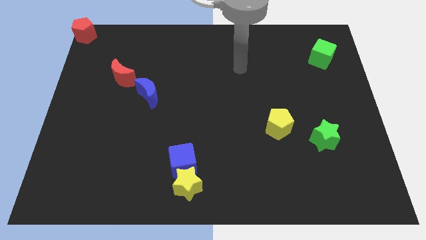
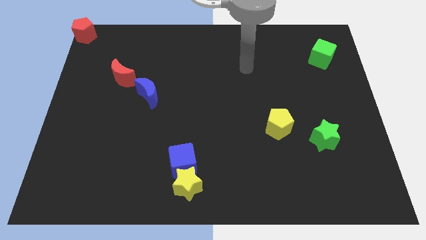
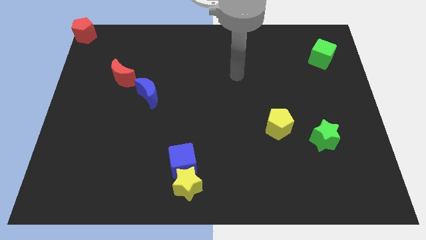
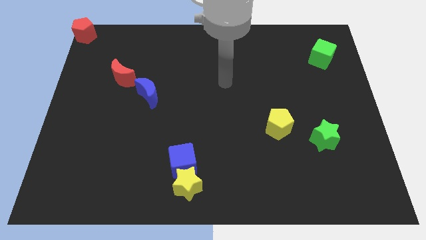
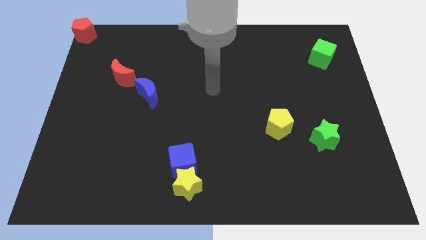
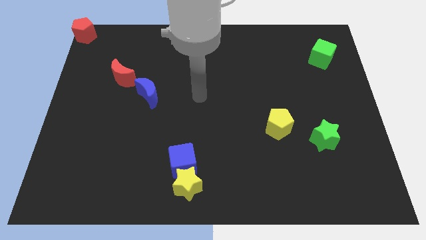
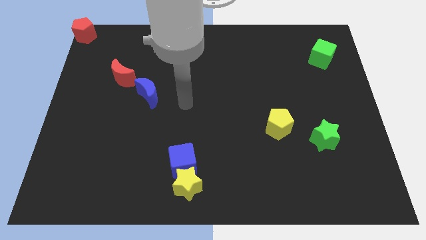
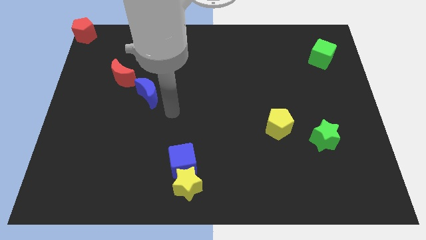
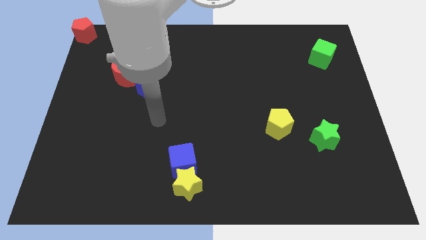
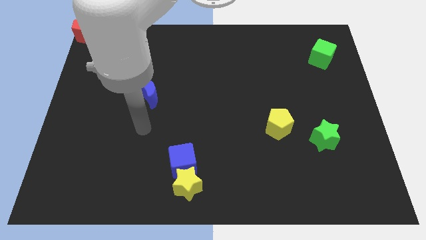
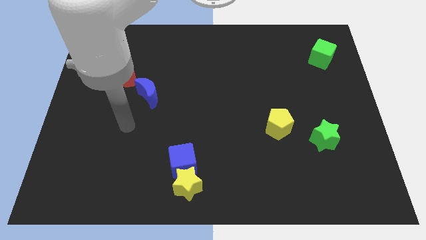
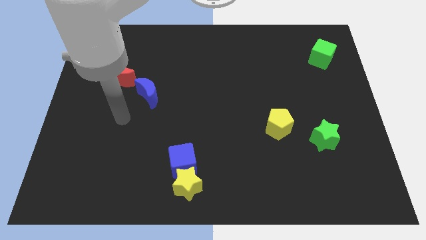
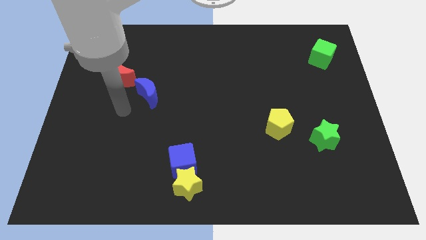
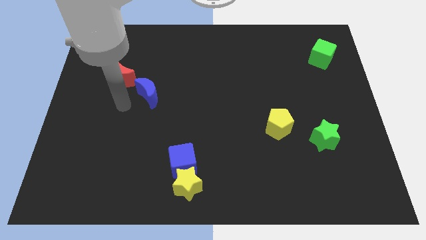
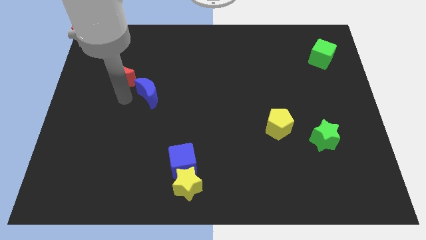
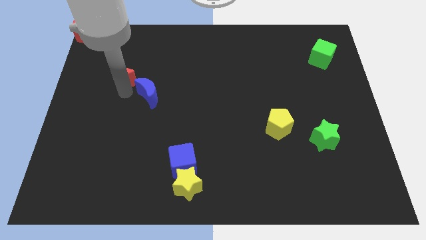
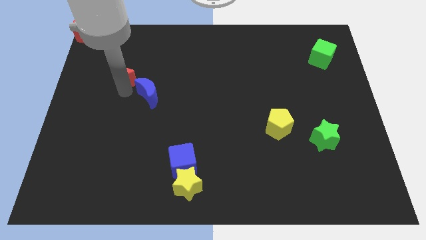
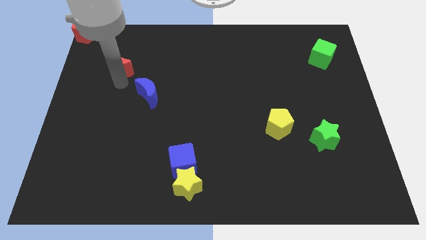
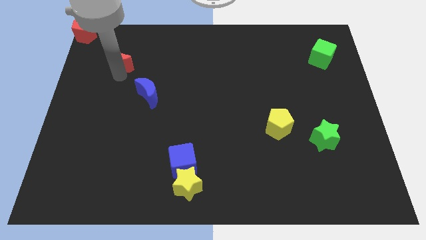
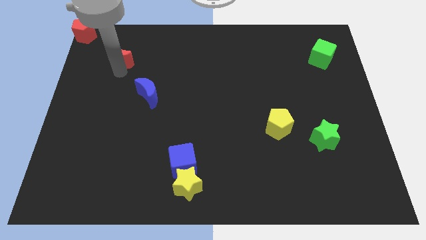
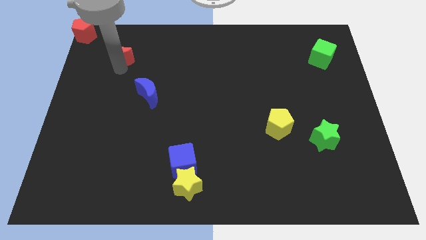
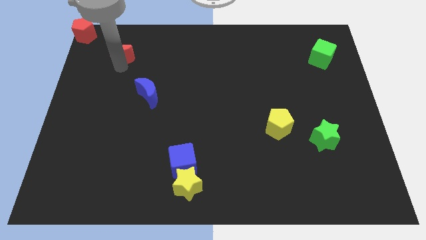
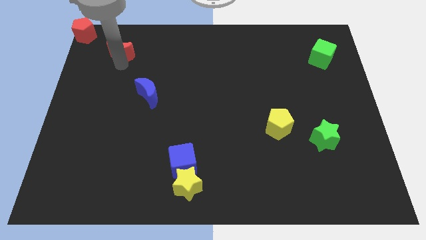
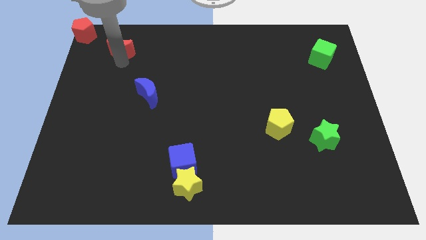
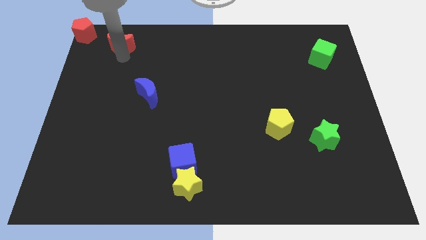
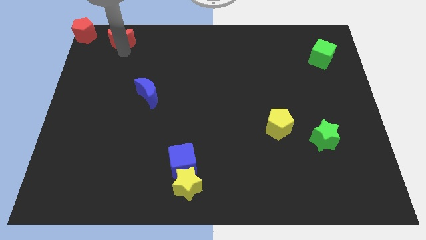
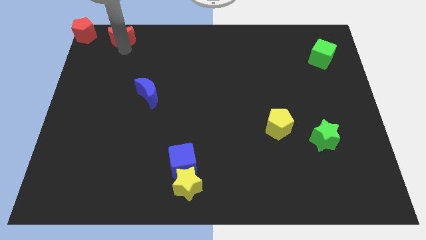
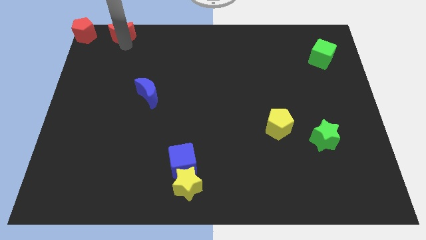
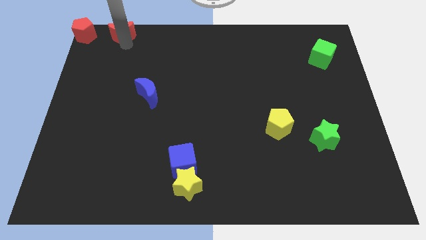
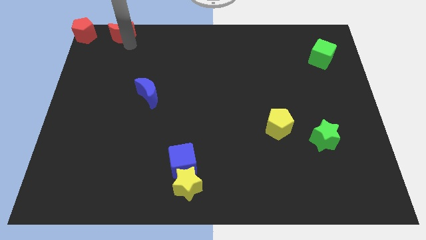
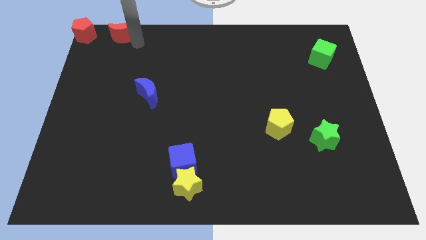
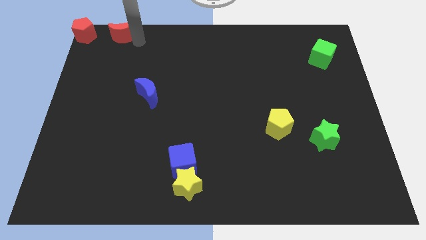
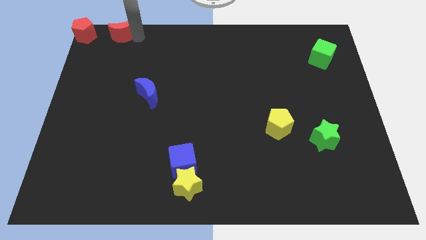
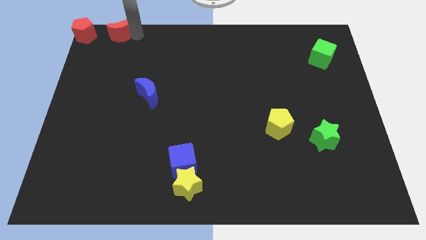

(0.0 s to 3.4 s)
separate the red moon from the blue moon

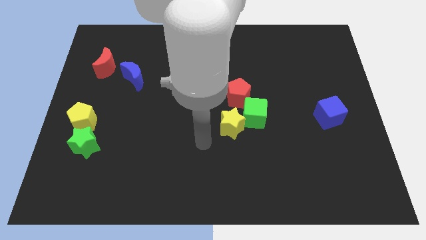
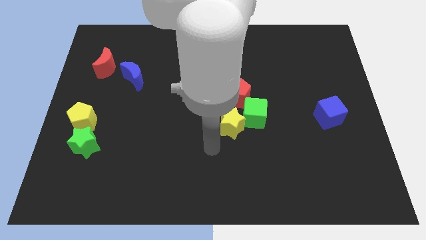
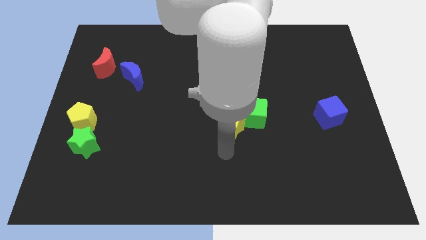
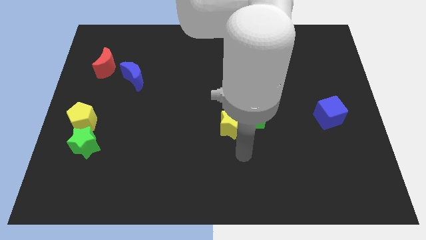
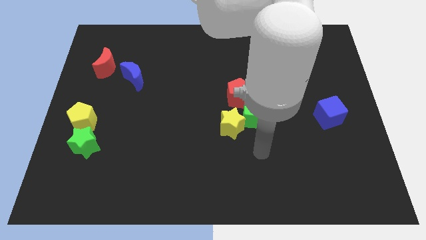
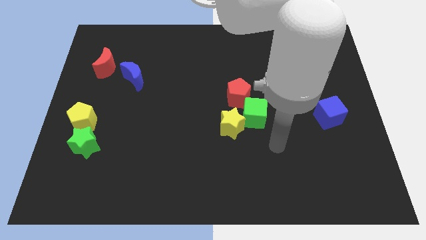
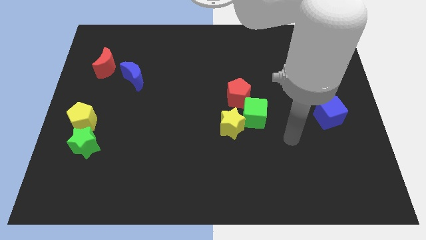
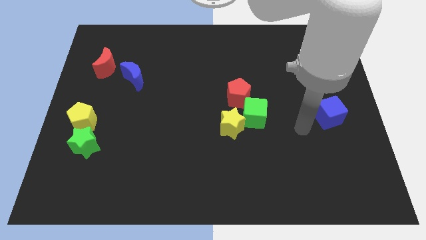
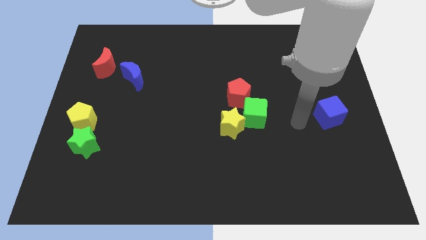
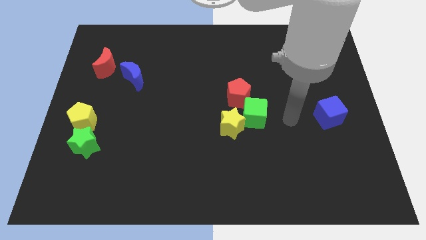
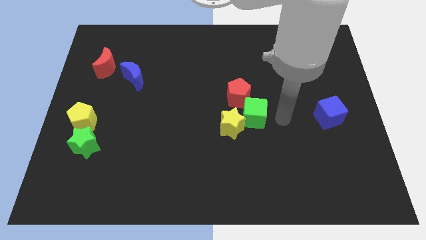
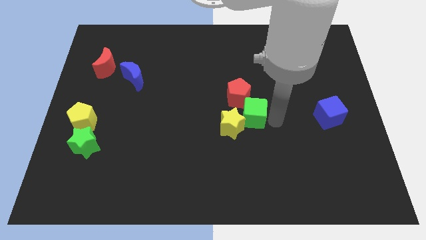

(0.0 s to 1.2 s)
move your arm at the right of the green cube

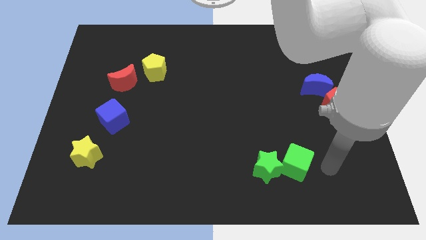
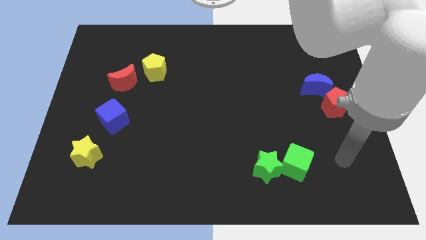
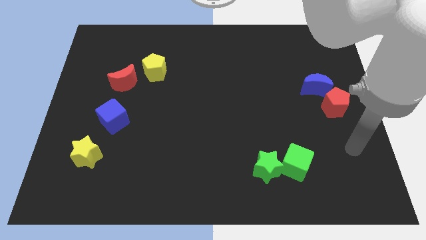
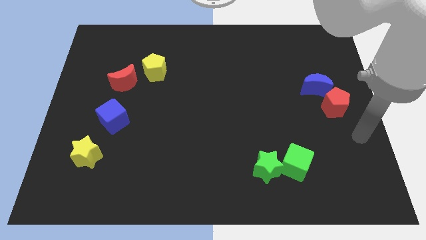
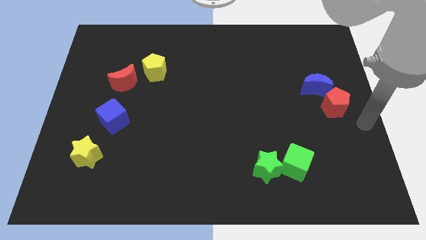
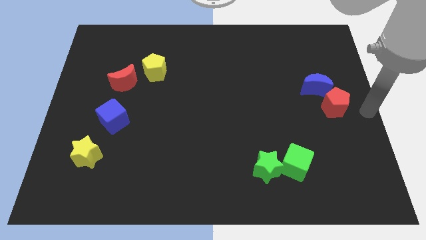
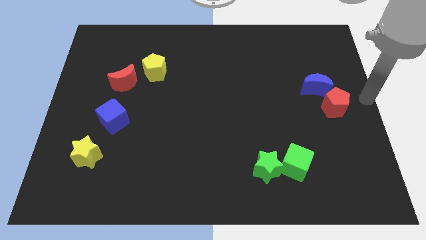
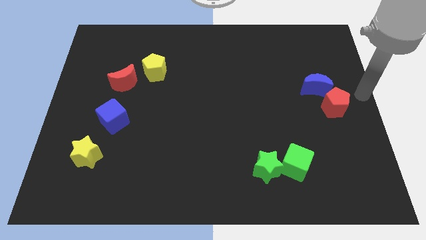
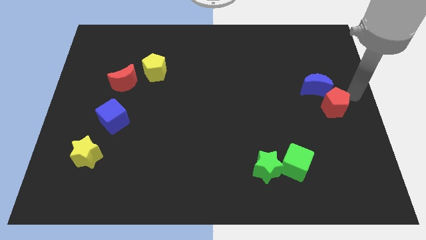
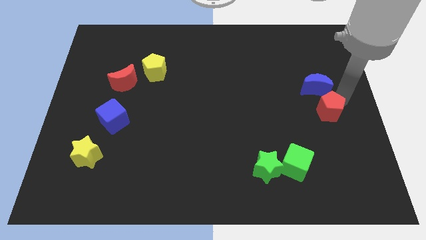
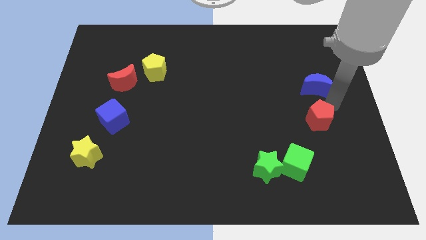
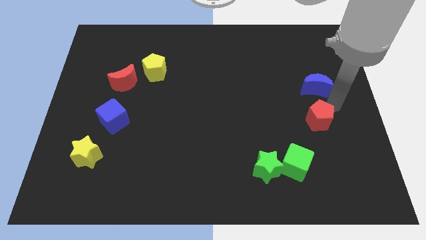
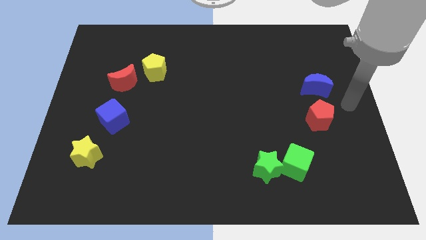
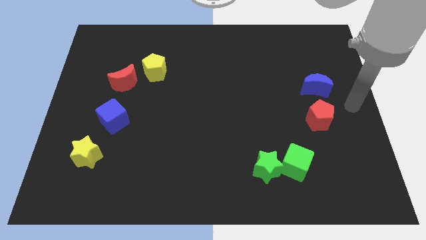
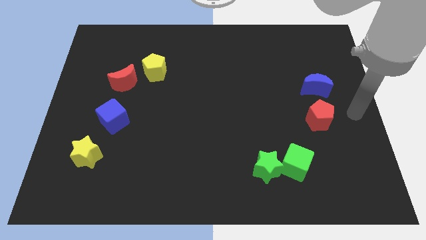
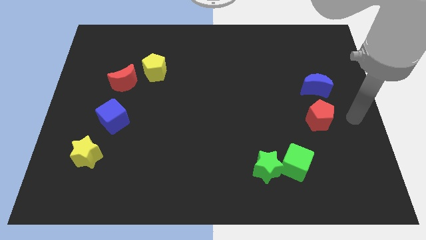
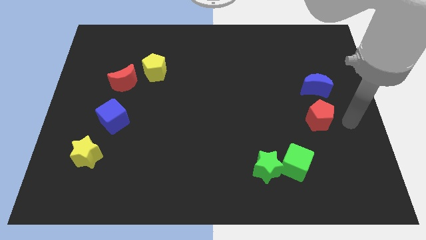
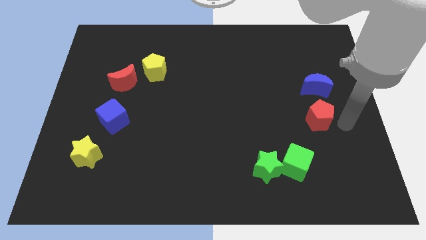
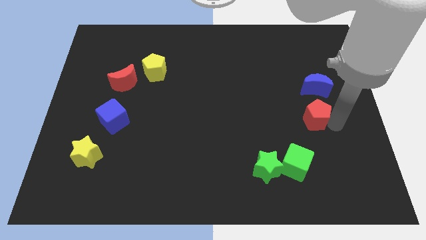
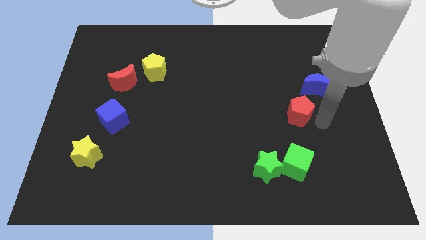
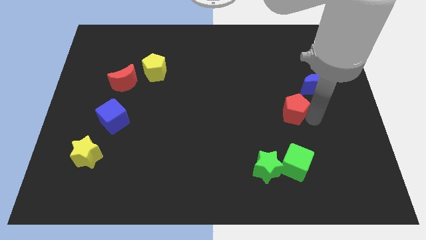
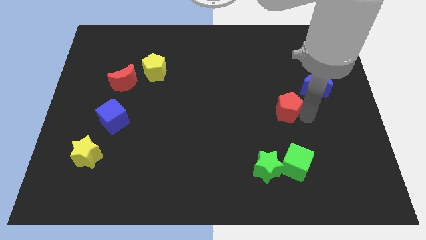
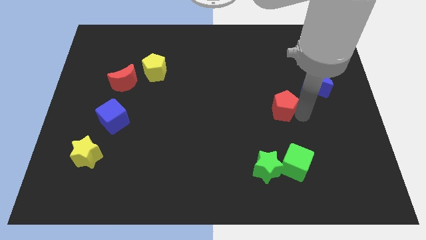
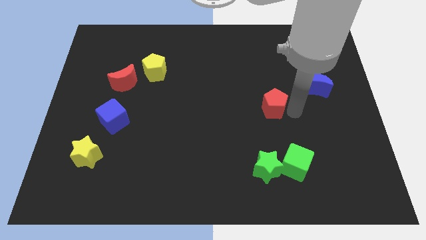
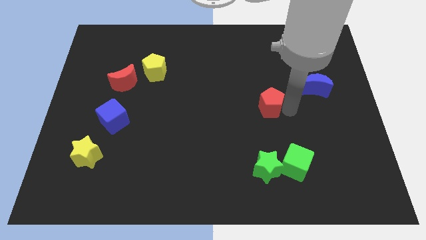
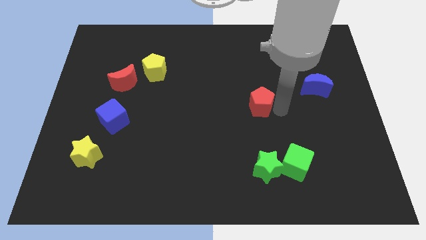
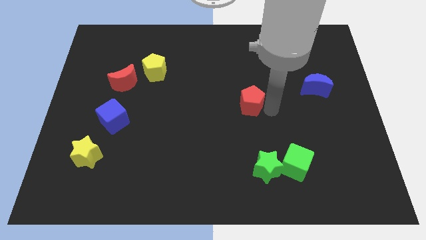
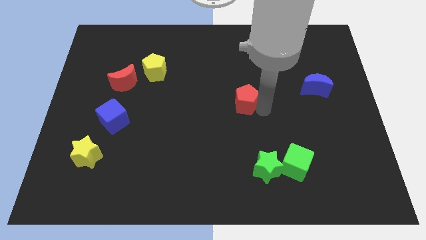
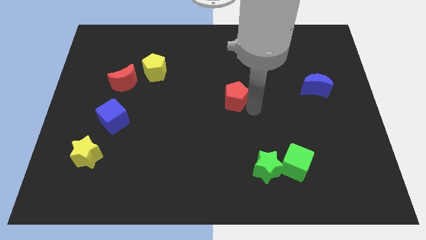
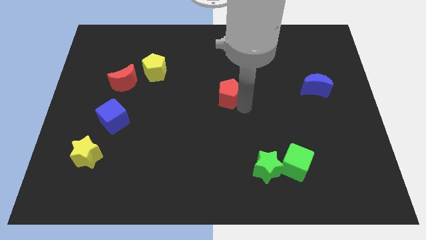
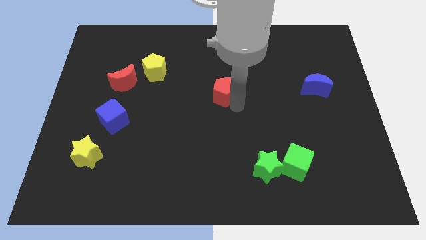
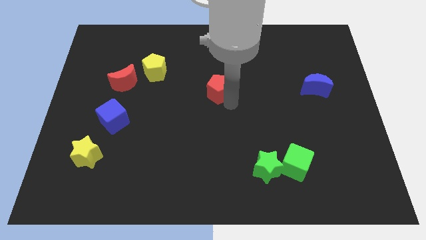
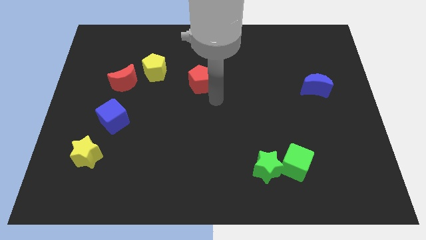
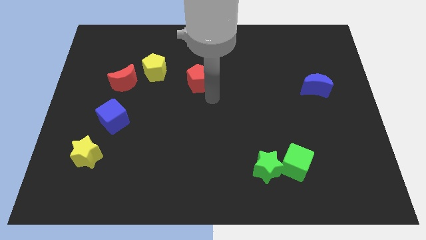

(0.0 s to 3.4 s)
push the red pentagon towards the right side of the yellow pentagon

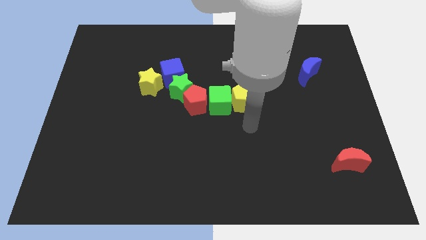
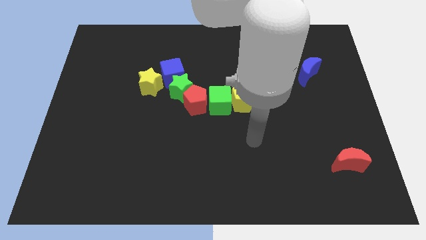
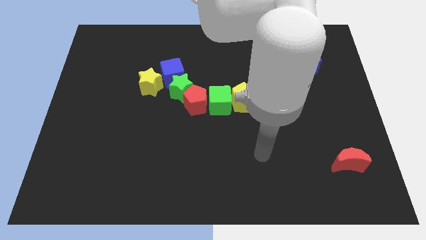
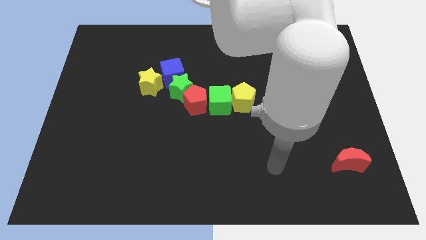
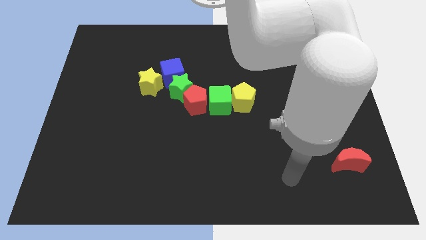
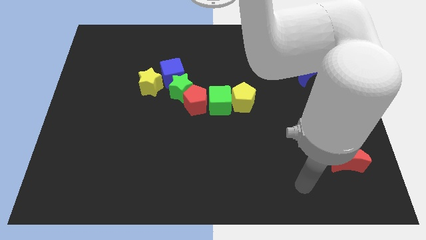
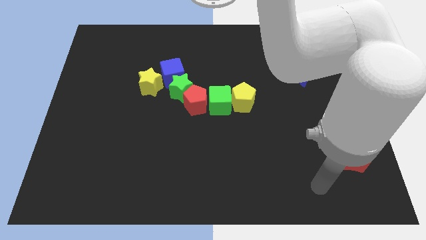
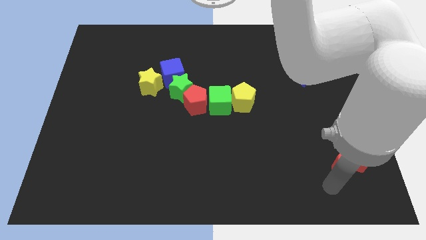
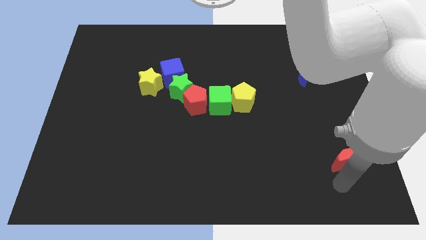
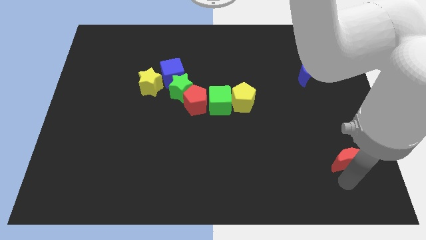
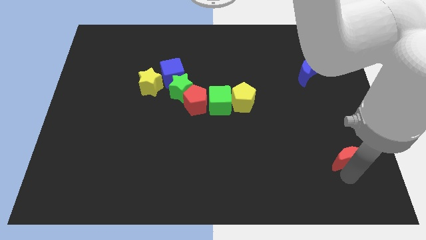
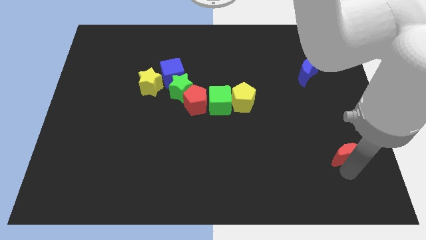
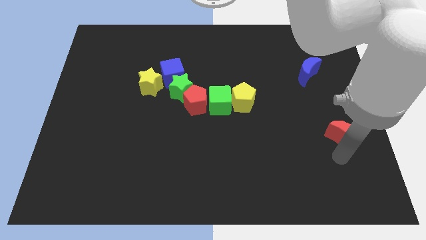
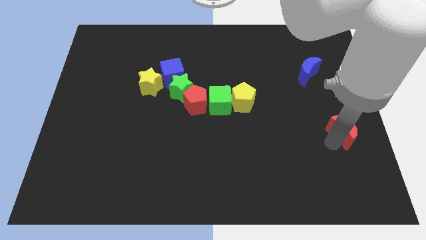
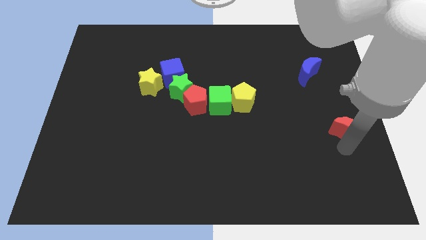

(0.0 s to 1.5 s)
move the red moon slightly up
